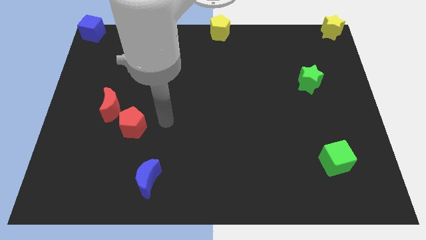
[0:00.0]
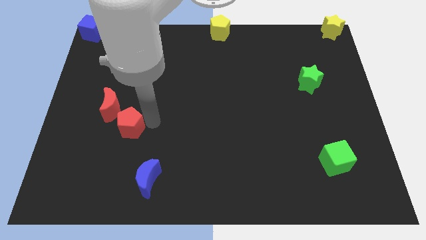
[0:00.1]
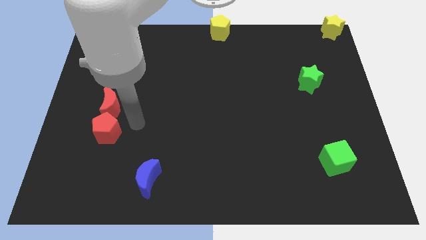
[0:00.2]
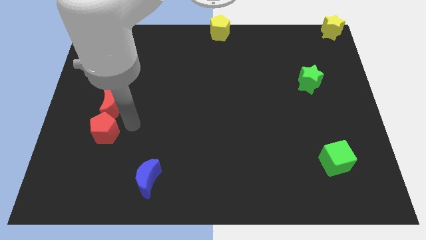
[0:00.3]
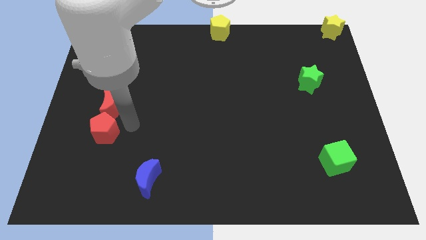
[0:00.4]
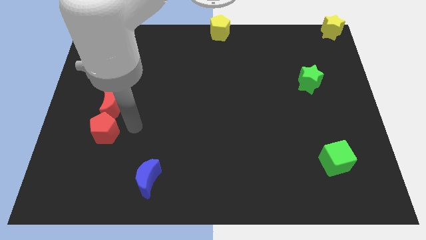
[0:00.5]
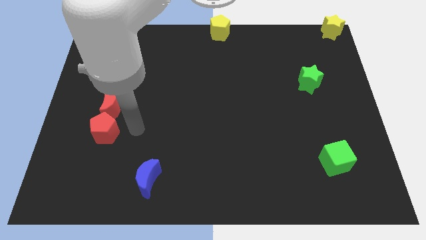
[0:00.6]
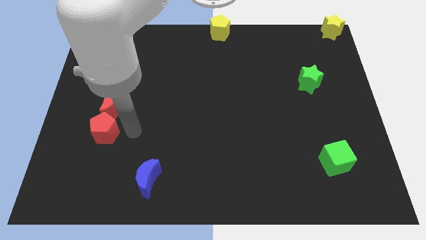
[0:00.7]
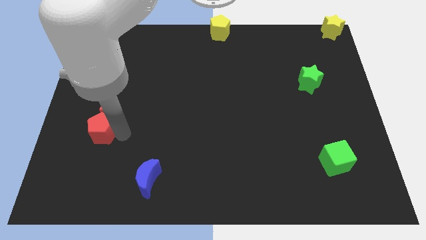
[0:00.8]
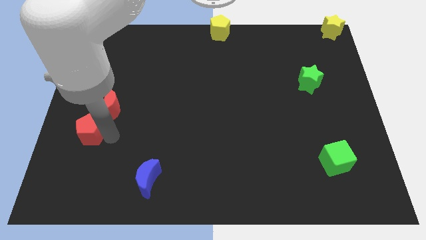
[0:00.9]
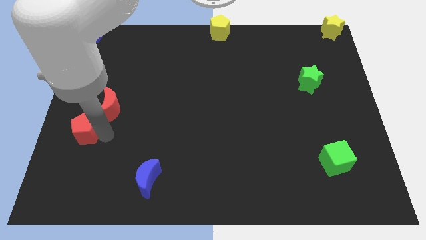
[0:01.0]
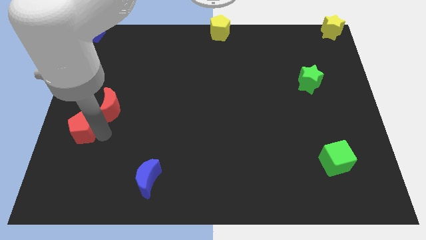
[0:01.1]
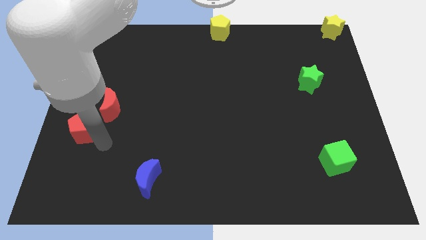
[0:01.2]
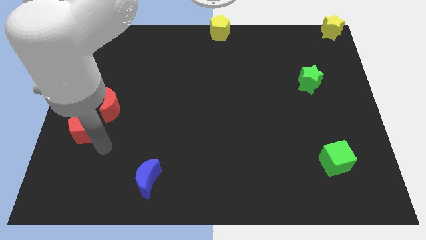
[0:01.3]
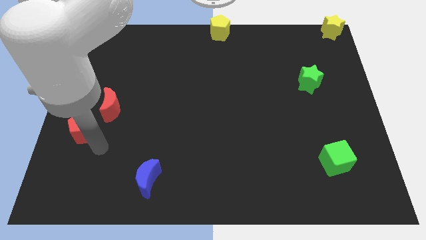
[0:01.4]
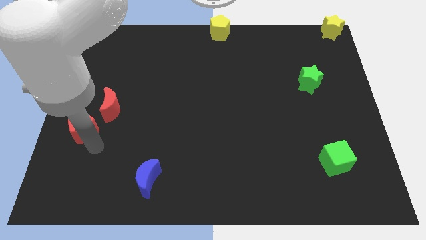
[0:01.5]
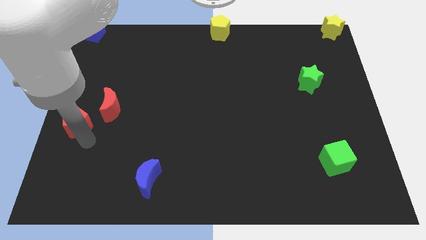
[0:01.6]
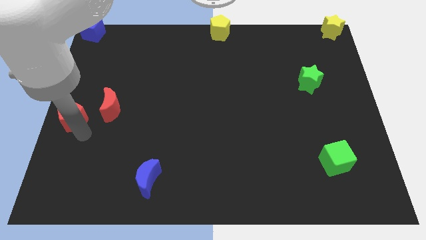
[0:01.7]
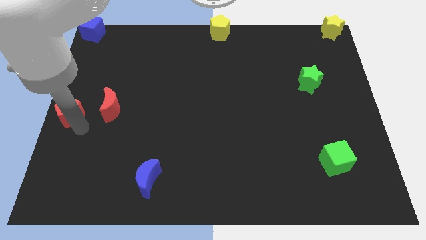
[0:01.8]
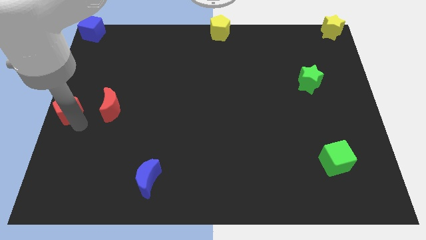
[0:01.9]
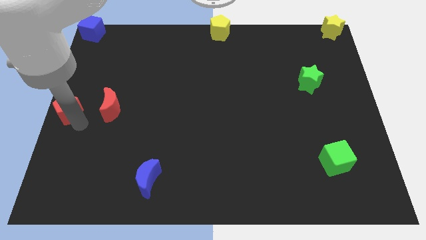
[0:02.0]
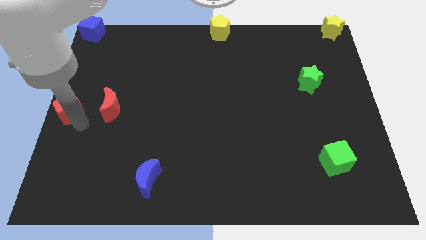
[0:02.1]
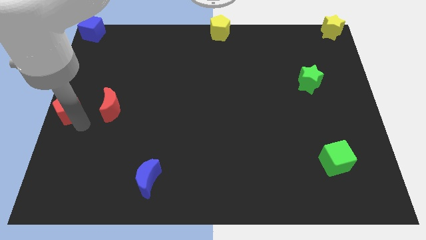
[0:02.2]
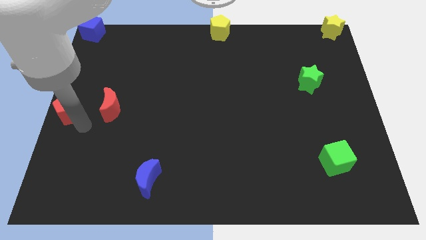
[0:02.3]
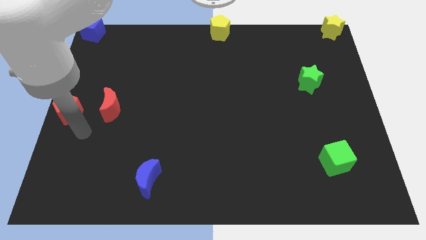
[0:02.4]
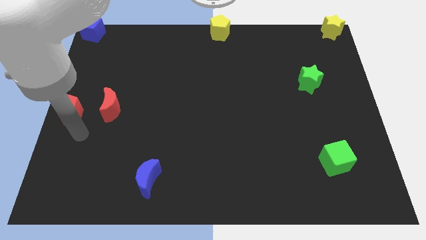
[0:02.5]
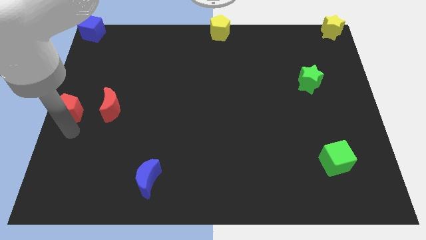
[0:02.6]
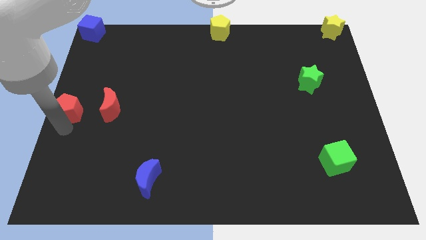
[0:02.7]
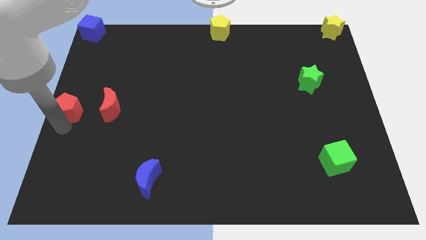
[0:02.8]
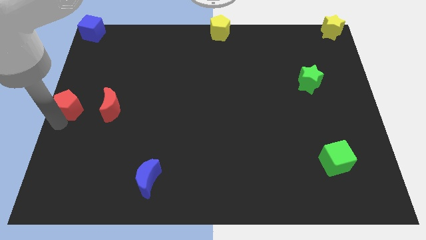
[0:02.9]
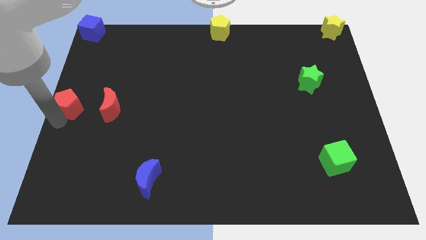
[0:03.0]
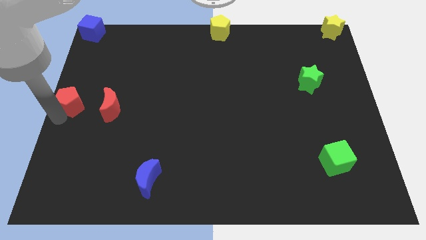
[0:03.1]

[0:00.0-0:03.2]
push the red pentagon towards center left of the board

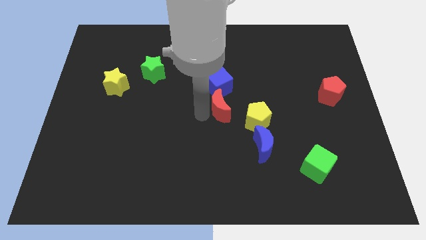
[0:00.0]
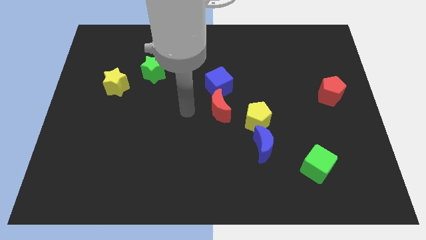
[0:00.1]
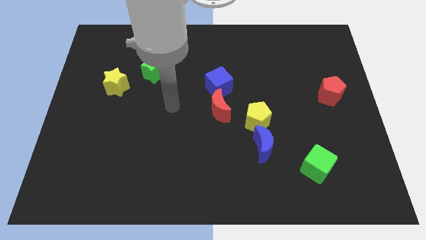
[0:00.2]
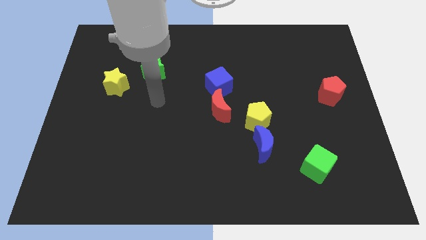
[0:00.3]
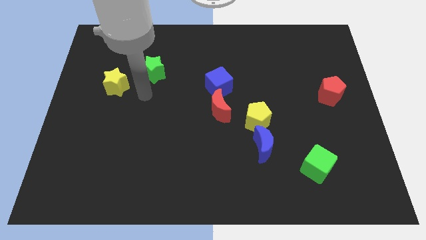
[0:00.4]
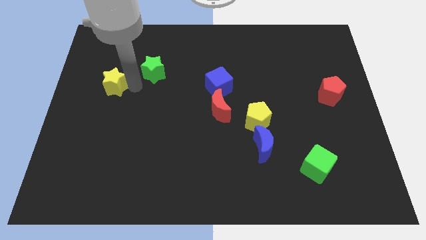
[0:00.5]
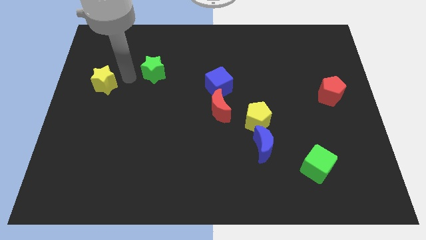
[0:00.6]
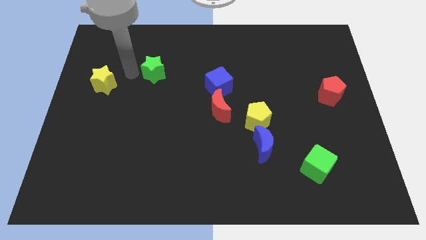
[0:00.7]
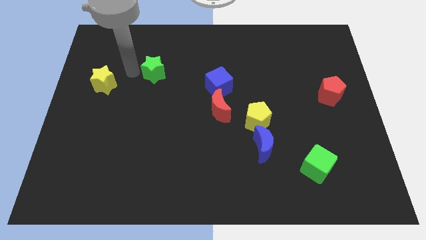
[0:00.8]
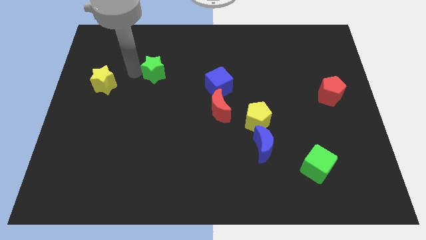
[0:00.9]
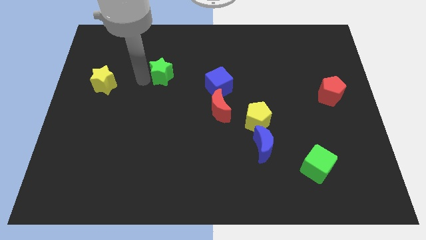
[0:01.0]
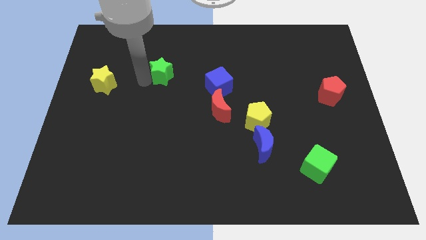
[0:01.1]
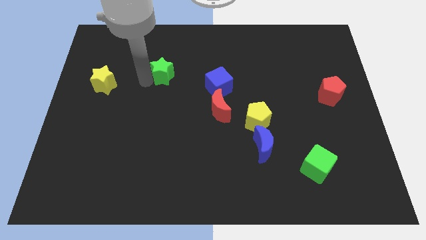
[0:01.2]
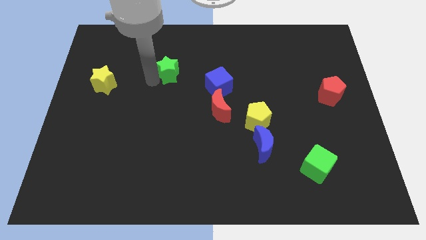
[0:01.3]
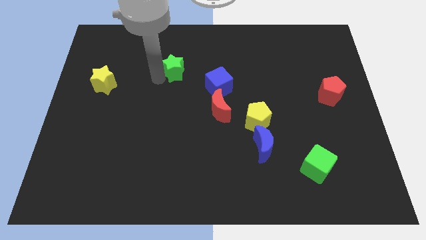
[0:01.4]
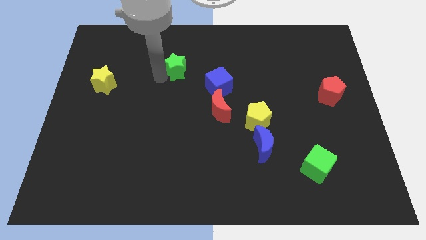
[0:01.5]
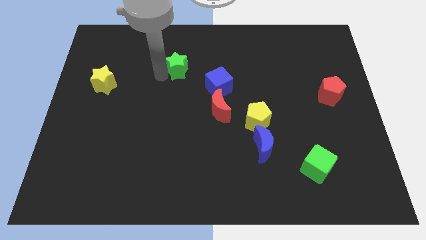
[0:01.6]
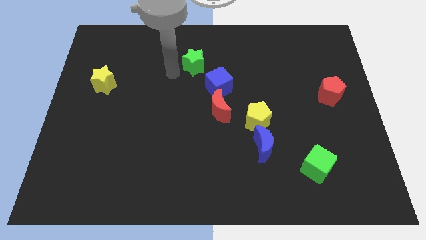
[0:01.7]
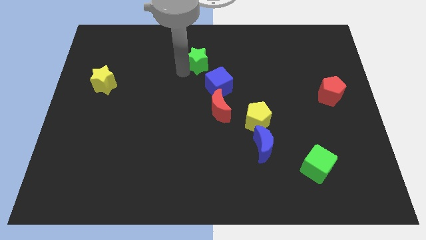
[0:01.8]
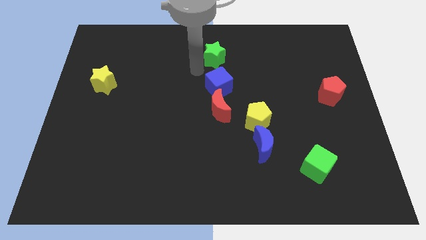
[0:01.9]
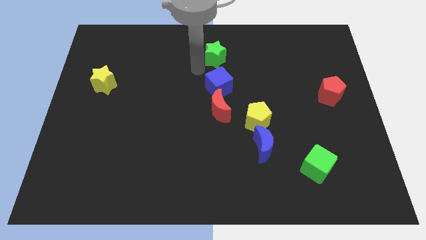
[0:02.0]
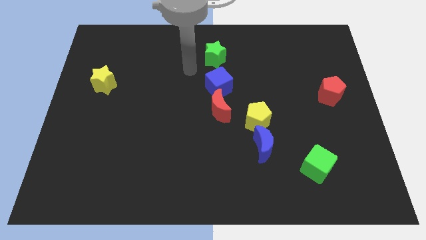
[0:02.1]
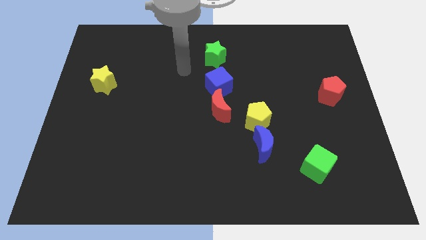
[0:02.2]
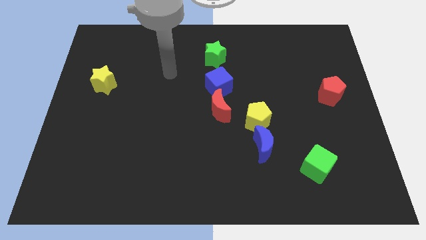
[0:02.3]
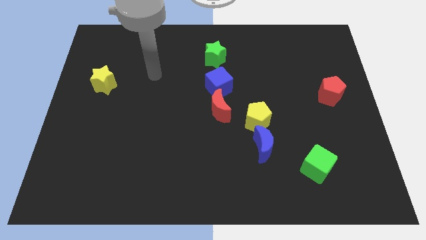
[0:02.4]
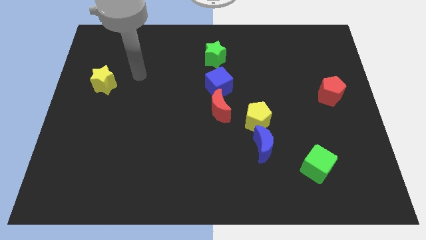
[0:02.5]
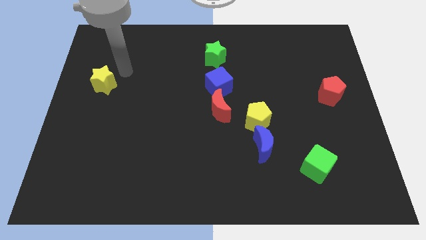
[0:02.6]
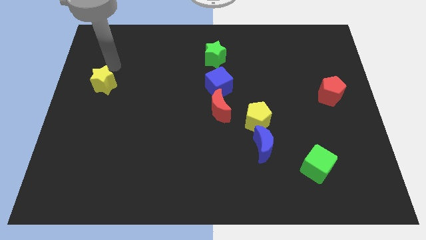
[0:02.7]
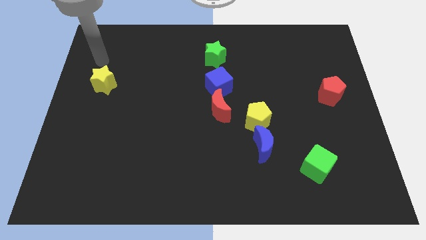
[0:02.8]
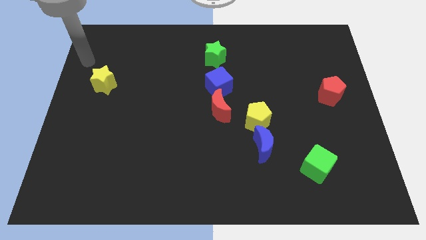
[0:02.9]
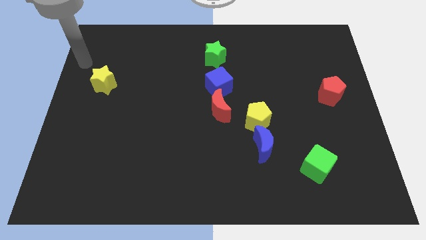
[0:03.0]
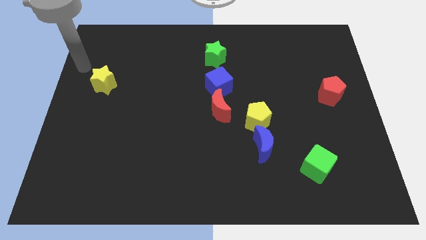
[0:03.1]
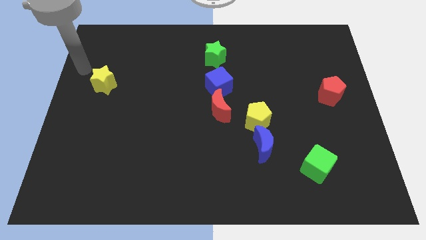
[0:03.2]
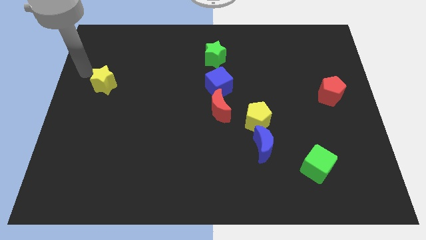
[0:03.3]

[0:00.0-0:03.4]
move green star vertically above the blue cube

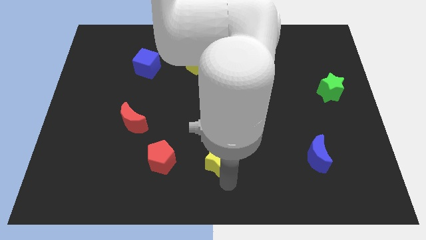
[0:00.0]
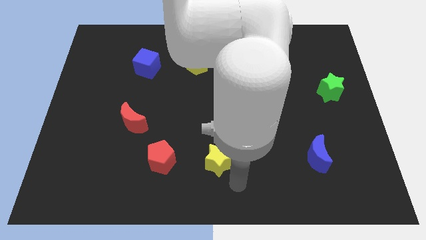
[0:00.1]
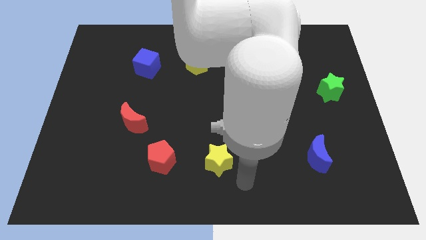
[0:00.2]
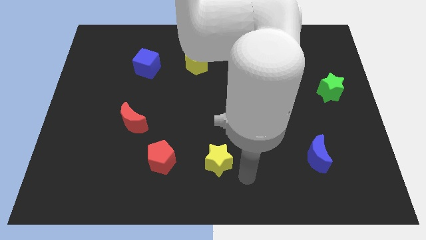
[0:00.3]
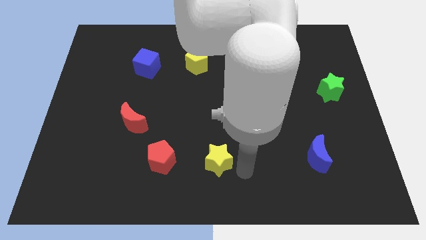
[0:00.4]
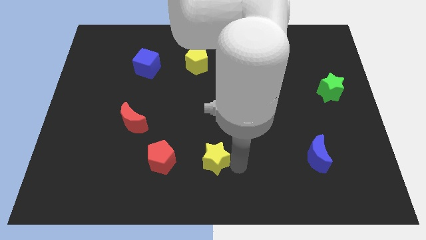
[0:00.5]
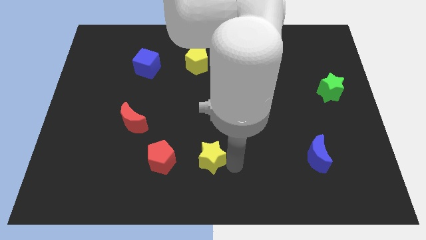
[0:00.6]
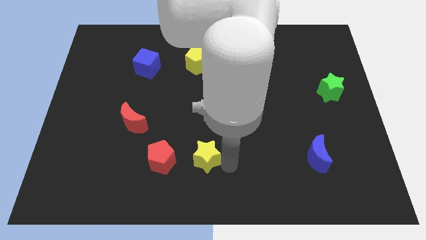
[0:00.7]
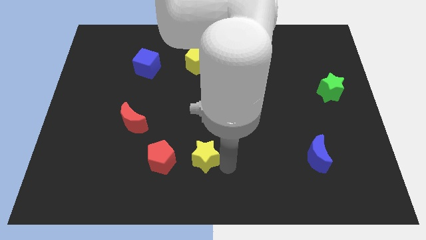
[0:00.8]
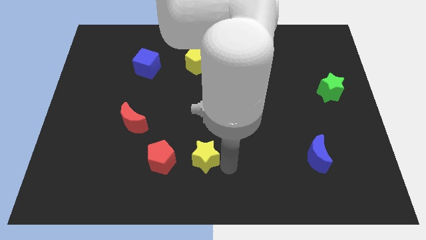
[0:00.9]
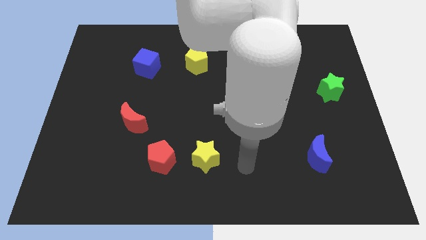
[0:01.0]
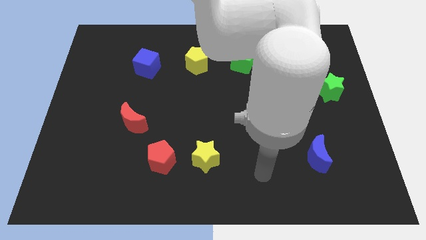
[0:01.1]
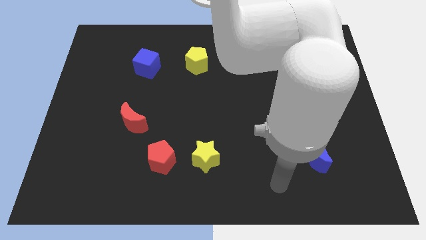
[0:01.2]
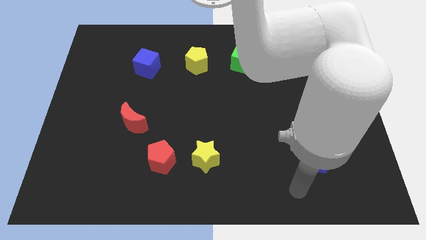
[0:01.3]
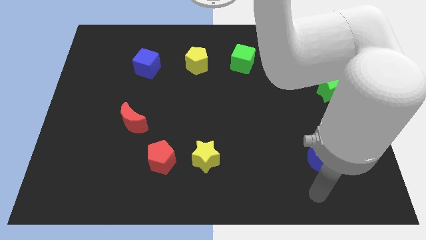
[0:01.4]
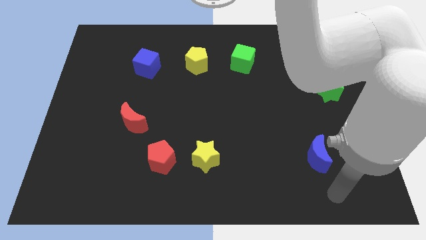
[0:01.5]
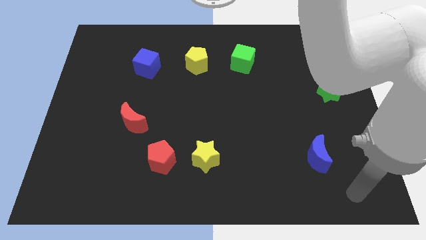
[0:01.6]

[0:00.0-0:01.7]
push the yellow star close to the red pentagon

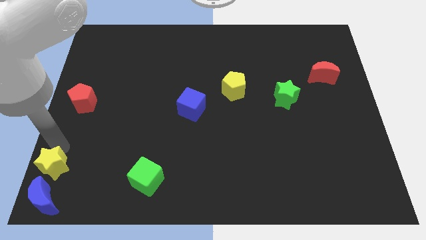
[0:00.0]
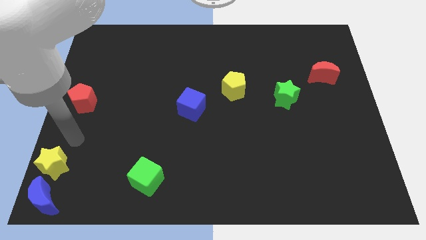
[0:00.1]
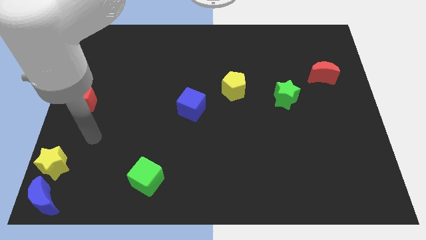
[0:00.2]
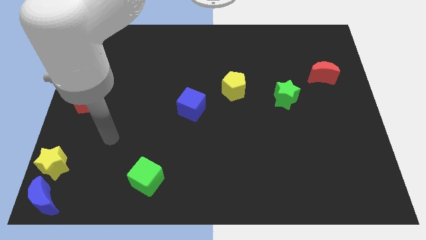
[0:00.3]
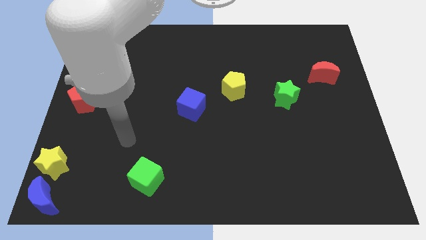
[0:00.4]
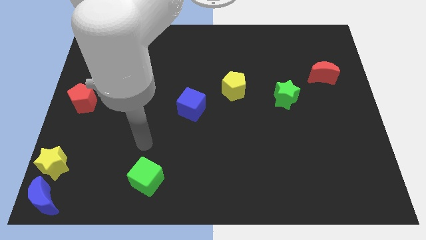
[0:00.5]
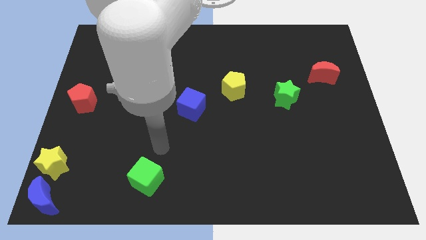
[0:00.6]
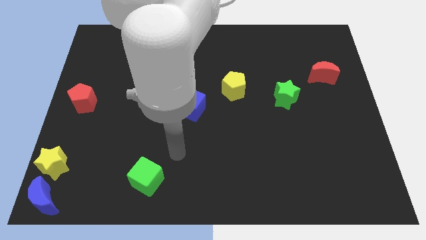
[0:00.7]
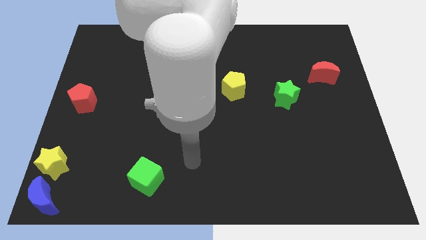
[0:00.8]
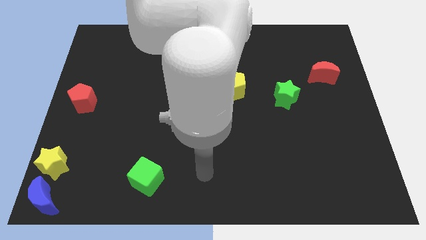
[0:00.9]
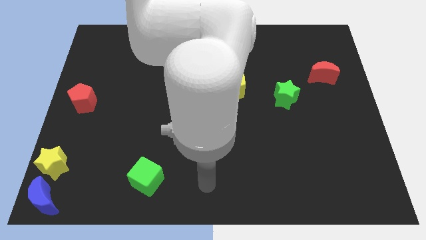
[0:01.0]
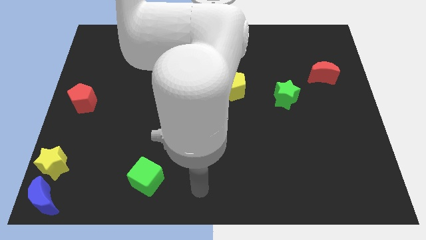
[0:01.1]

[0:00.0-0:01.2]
place your arm at the bottom center of the board
